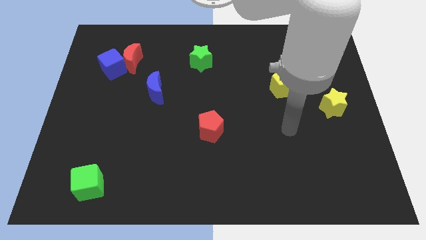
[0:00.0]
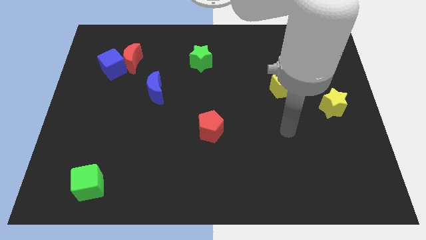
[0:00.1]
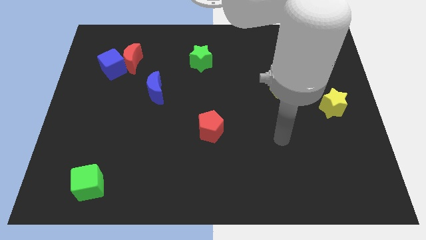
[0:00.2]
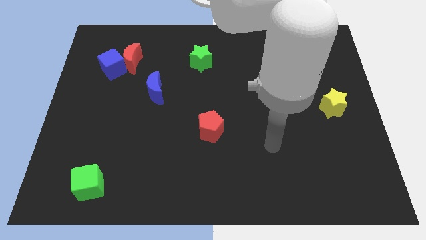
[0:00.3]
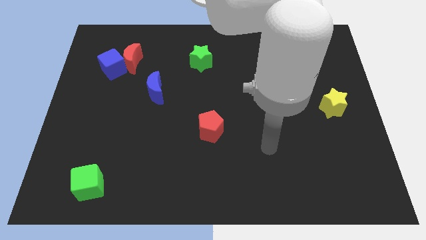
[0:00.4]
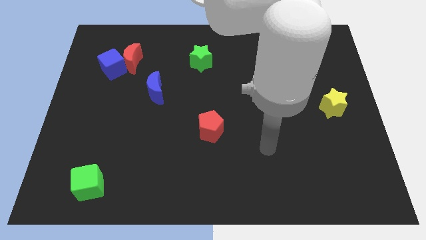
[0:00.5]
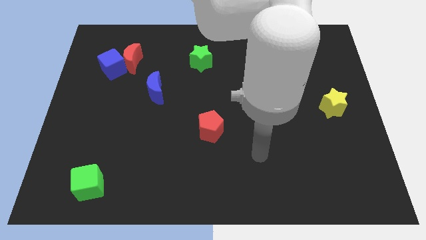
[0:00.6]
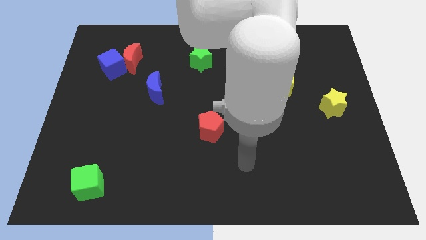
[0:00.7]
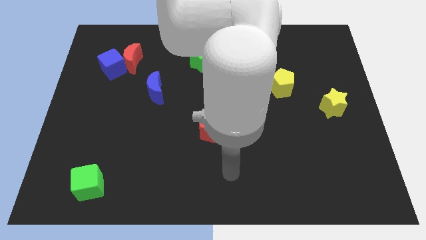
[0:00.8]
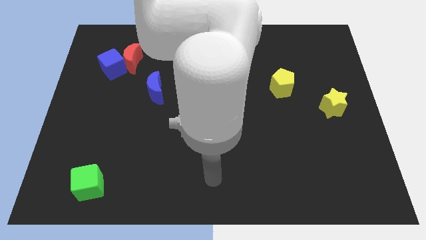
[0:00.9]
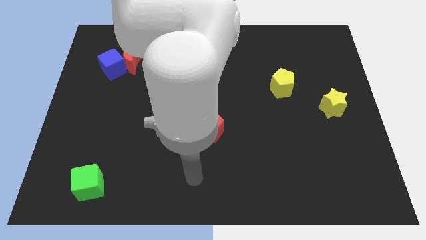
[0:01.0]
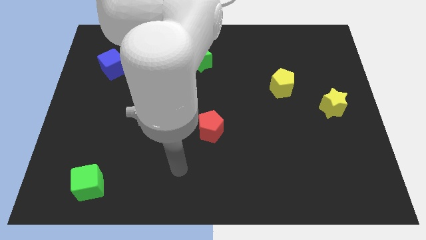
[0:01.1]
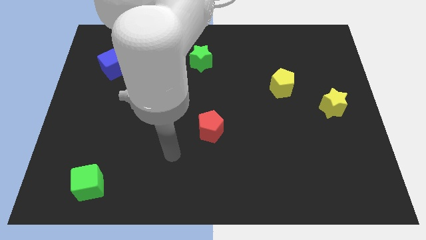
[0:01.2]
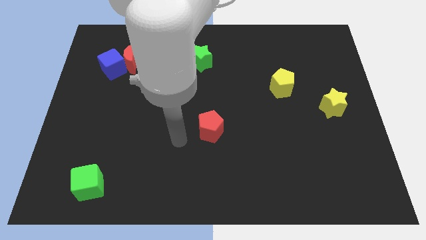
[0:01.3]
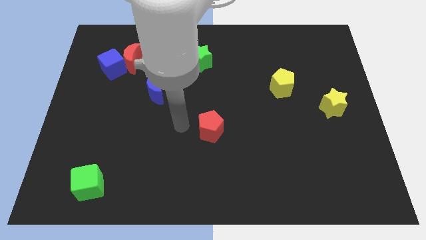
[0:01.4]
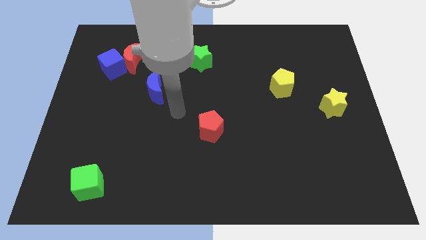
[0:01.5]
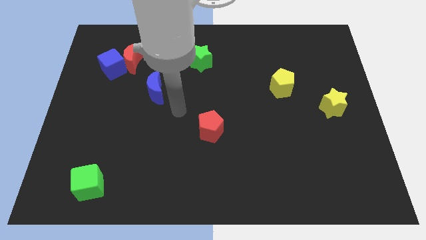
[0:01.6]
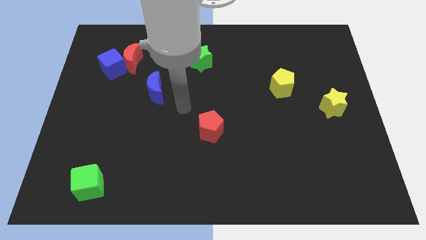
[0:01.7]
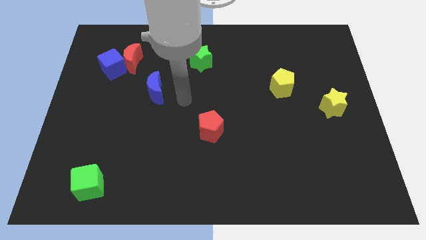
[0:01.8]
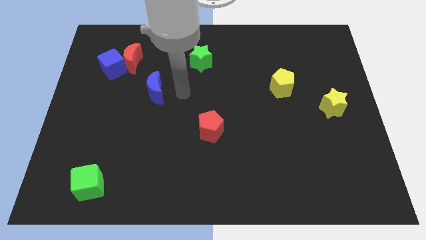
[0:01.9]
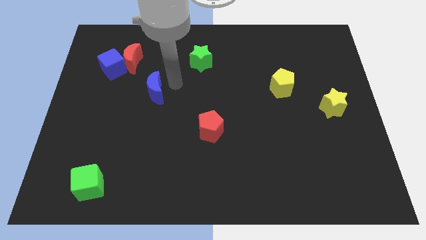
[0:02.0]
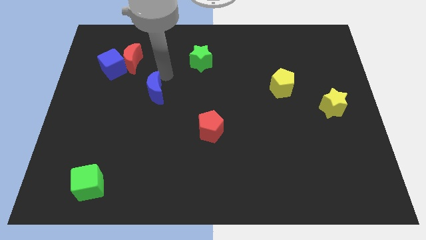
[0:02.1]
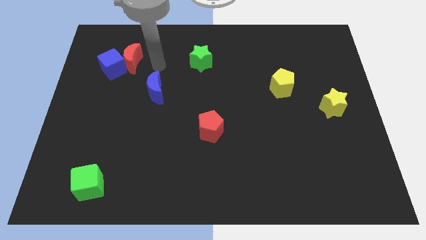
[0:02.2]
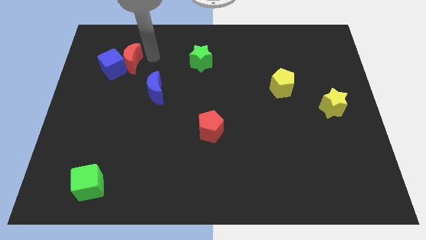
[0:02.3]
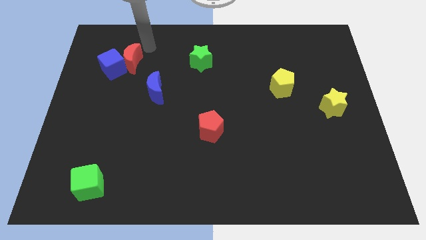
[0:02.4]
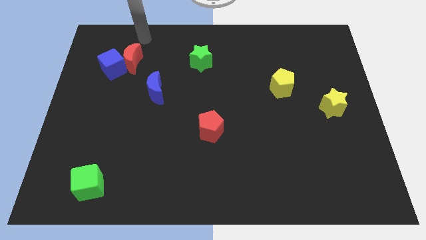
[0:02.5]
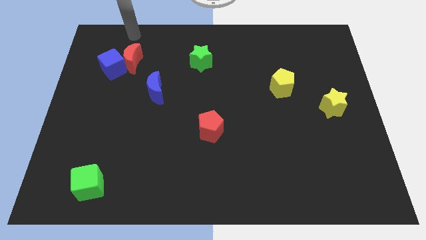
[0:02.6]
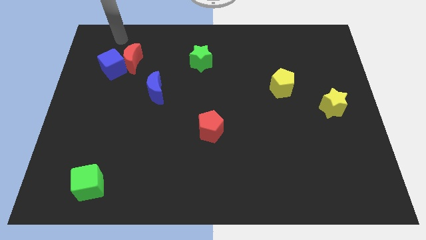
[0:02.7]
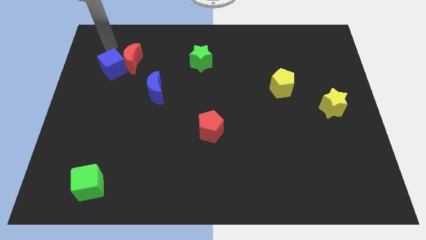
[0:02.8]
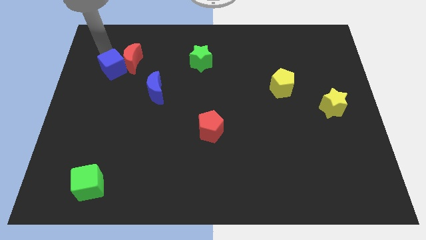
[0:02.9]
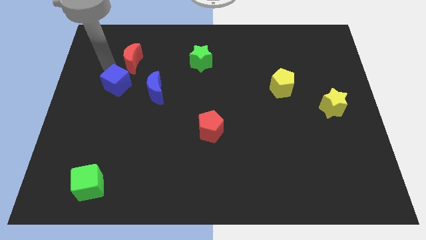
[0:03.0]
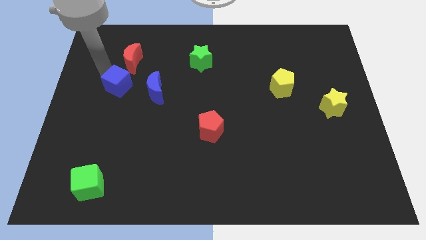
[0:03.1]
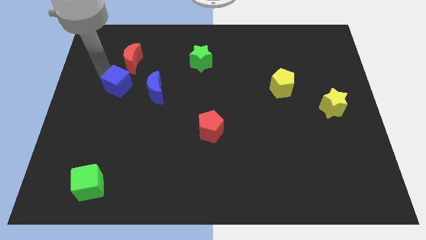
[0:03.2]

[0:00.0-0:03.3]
place the blue cube to the left of the blue crescent

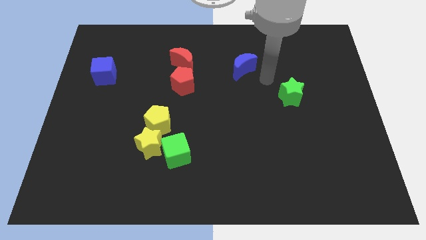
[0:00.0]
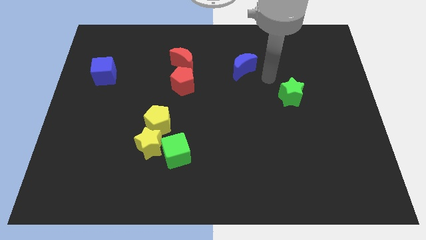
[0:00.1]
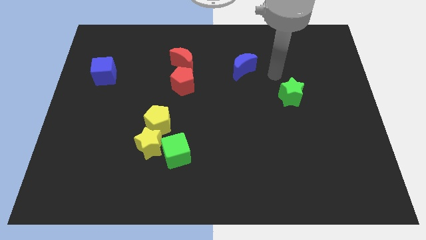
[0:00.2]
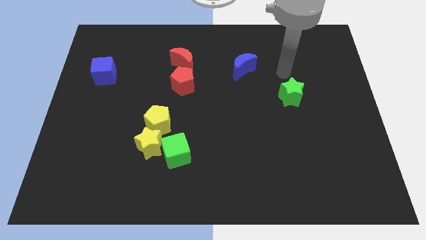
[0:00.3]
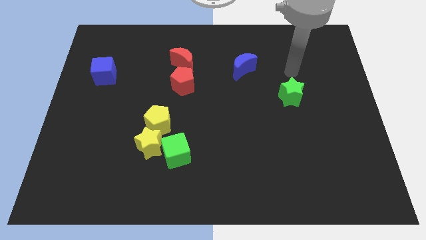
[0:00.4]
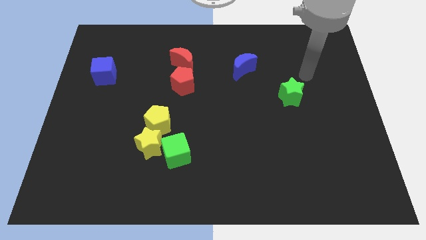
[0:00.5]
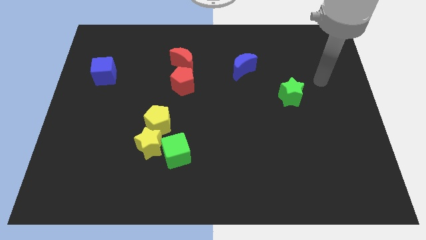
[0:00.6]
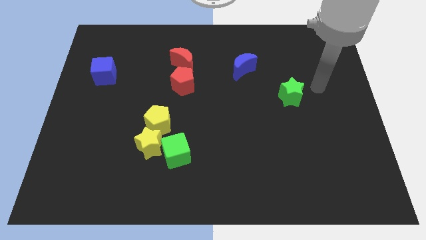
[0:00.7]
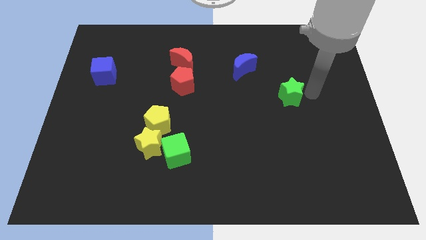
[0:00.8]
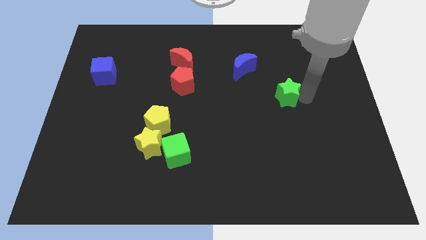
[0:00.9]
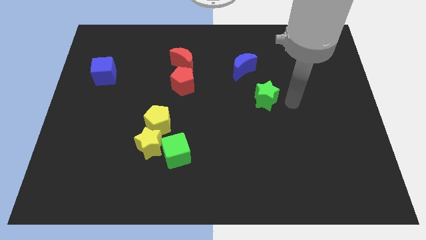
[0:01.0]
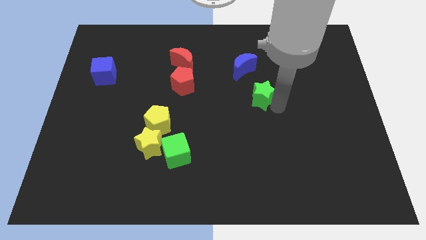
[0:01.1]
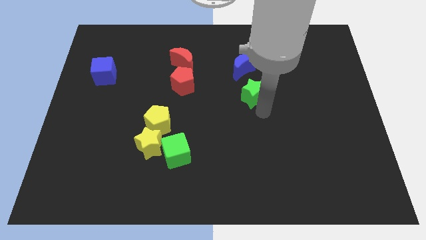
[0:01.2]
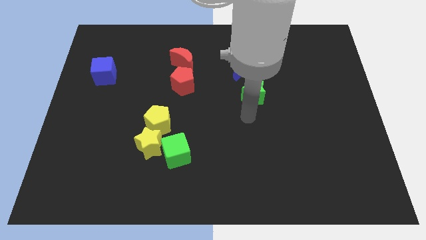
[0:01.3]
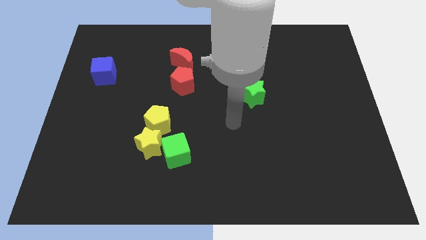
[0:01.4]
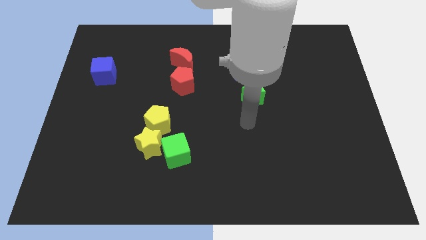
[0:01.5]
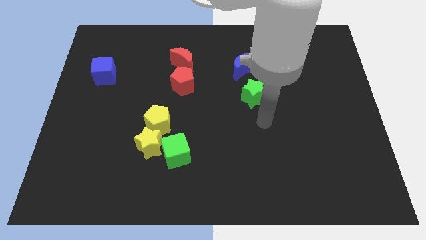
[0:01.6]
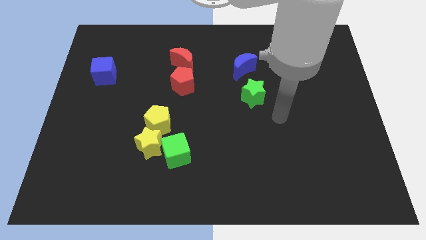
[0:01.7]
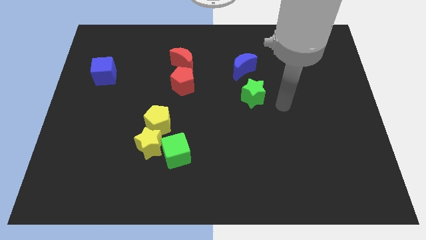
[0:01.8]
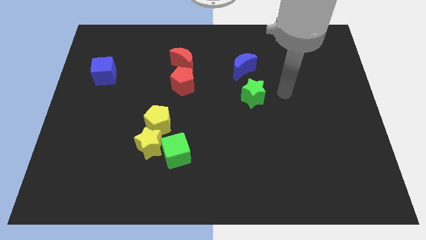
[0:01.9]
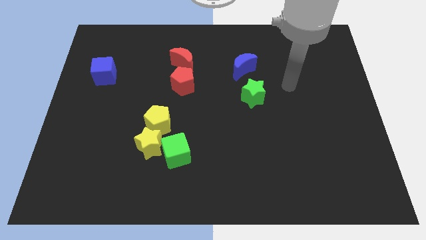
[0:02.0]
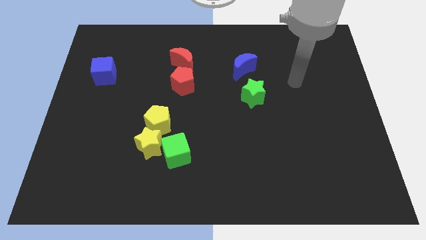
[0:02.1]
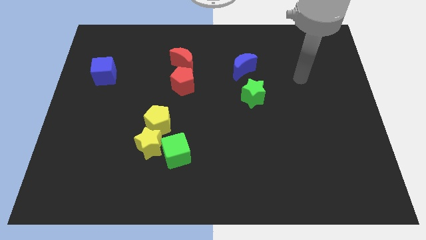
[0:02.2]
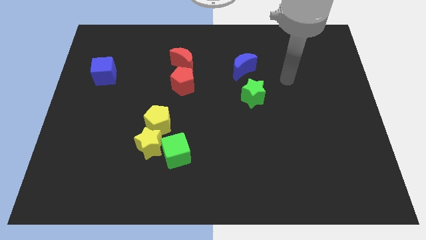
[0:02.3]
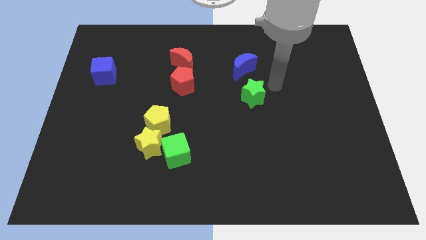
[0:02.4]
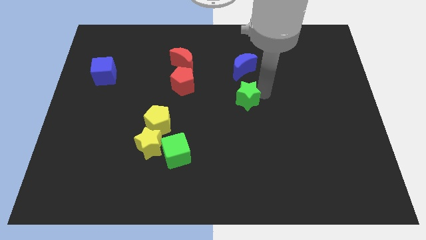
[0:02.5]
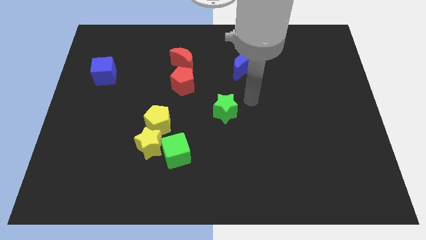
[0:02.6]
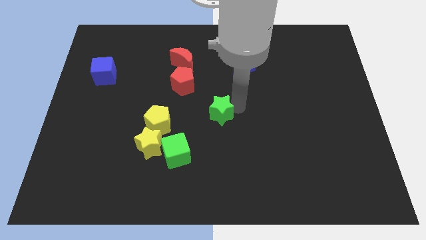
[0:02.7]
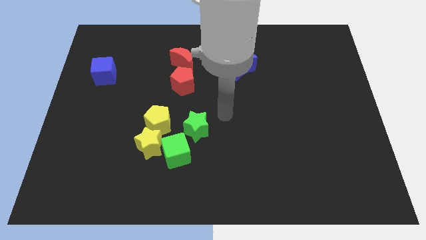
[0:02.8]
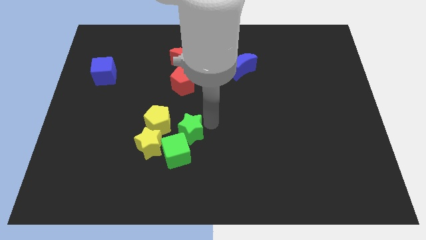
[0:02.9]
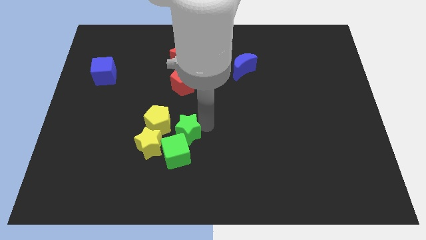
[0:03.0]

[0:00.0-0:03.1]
push green star below red pentagon

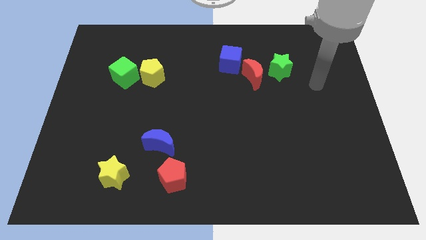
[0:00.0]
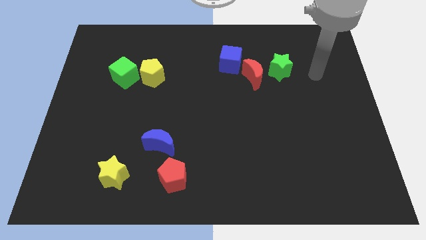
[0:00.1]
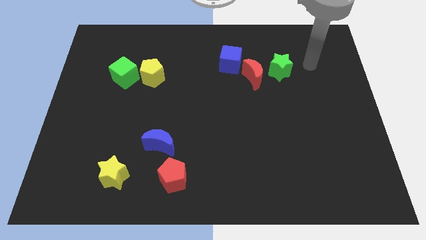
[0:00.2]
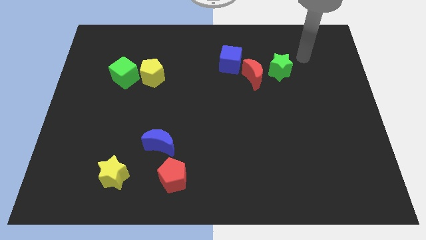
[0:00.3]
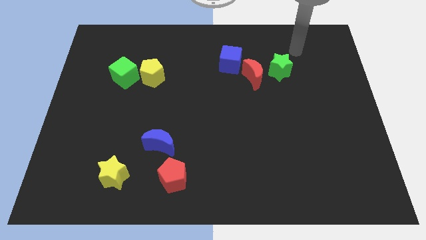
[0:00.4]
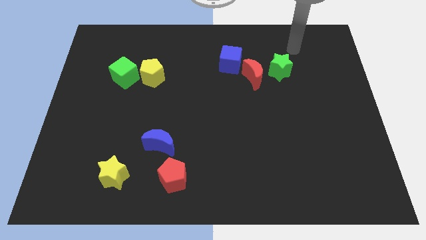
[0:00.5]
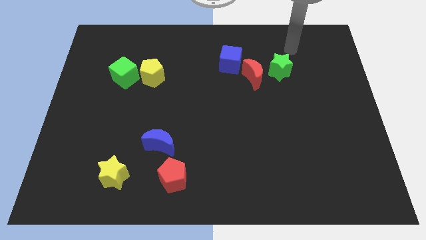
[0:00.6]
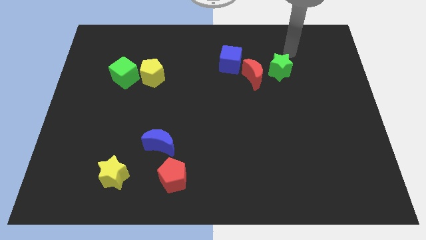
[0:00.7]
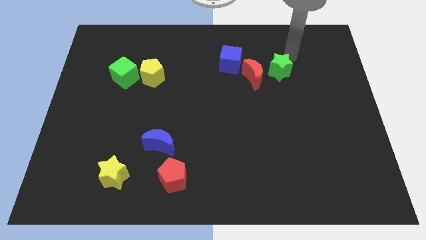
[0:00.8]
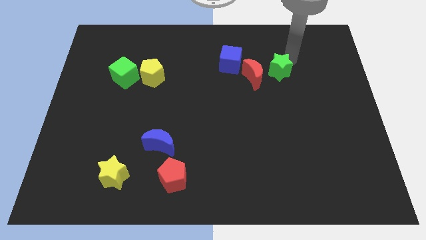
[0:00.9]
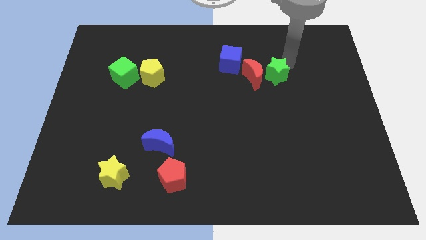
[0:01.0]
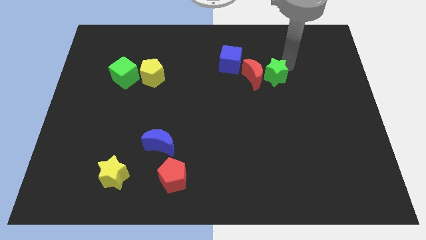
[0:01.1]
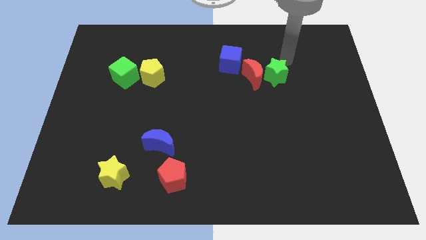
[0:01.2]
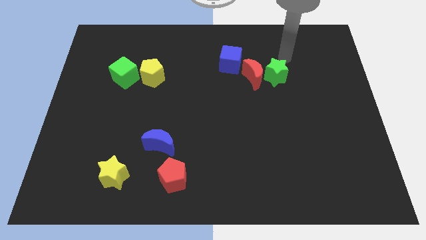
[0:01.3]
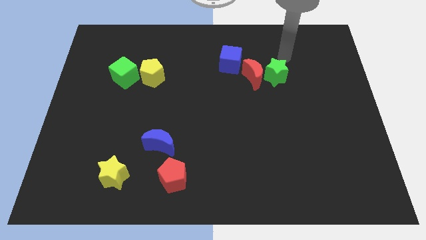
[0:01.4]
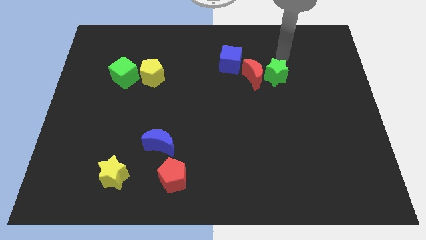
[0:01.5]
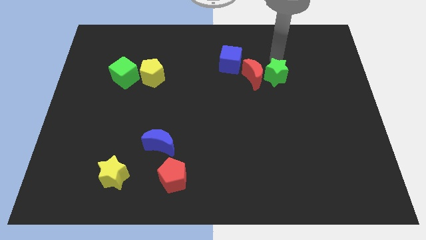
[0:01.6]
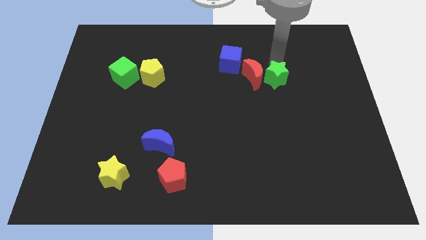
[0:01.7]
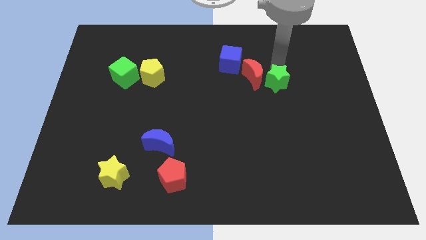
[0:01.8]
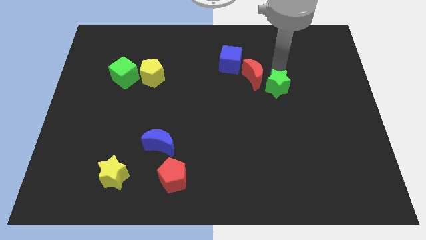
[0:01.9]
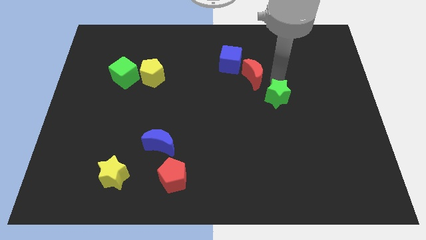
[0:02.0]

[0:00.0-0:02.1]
push the green star slightly to the bottom right of red moon

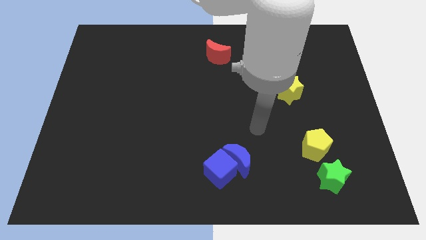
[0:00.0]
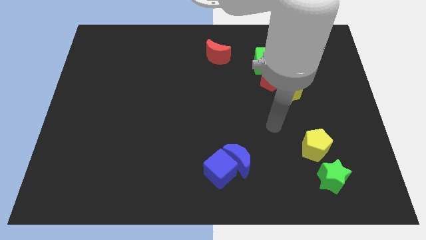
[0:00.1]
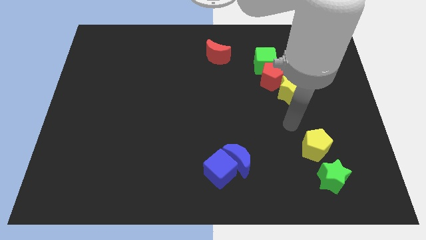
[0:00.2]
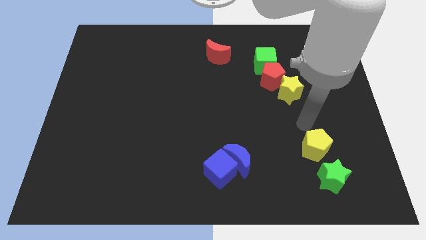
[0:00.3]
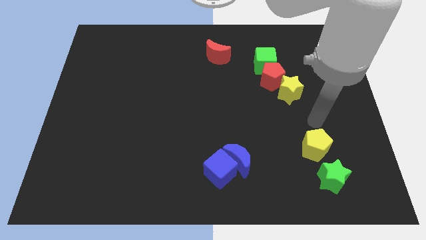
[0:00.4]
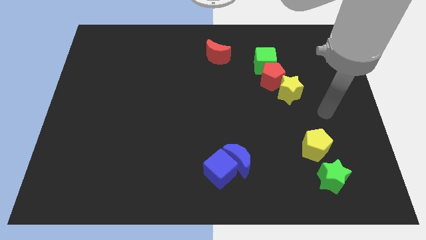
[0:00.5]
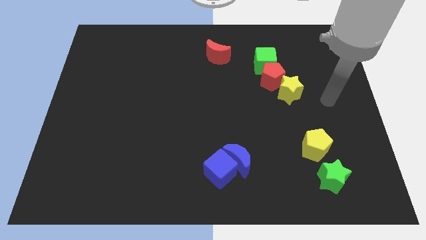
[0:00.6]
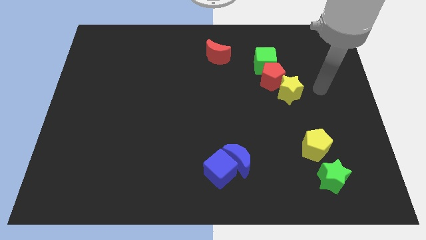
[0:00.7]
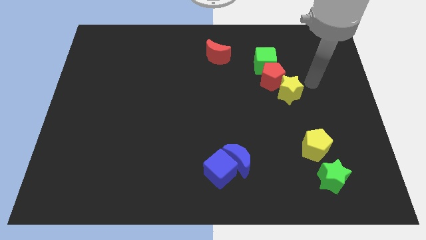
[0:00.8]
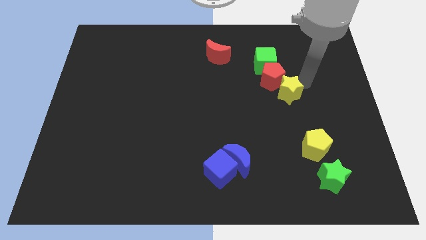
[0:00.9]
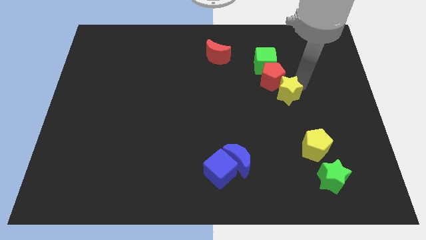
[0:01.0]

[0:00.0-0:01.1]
touch the yellow star
